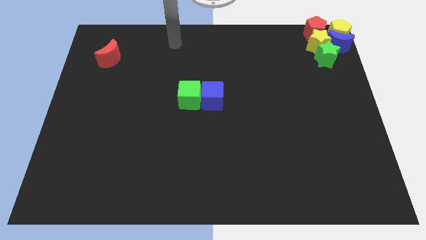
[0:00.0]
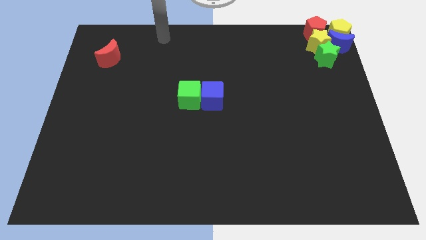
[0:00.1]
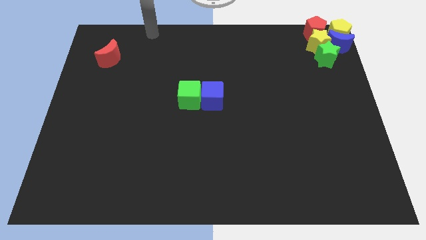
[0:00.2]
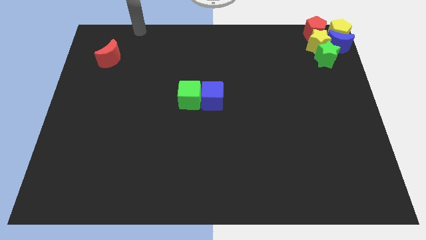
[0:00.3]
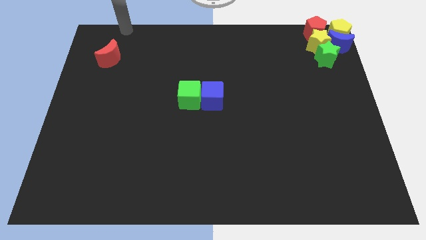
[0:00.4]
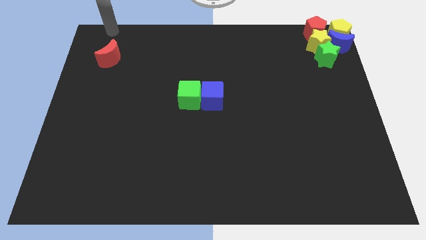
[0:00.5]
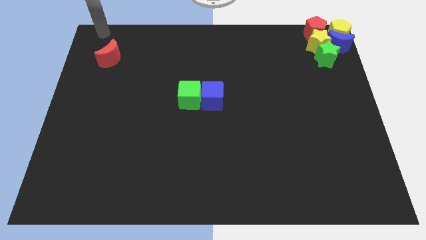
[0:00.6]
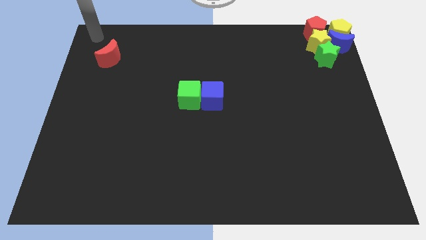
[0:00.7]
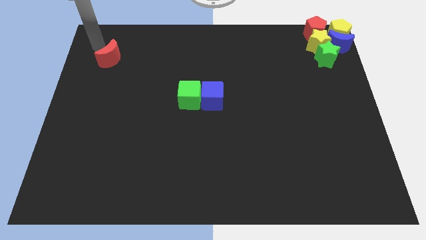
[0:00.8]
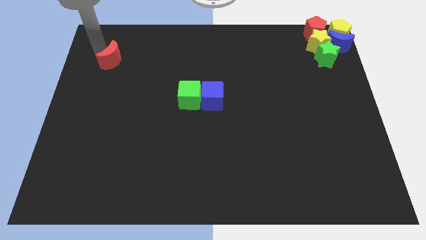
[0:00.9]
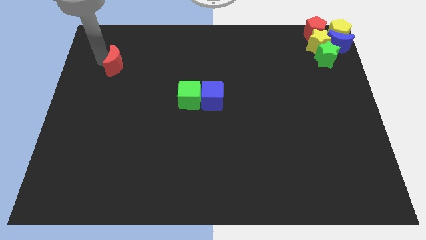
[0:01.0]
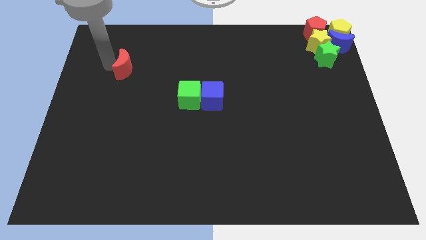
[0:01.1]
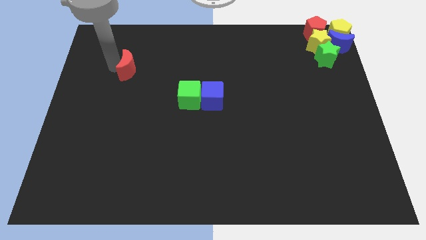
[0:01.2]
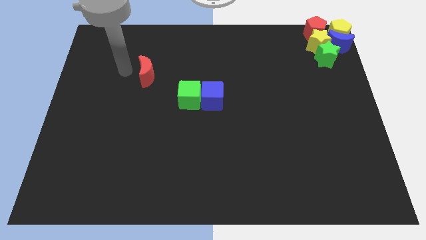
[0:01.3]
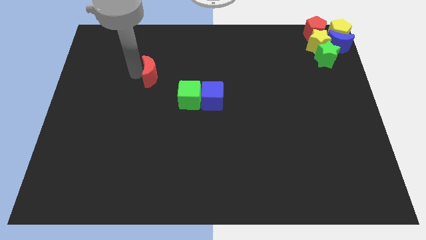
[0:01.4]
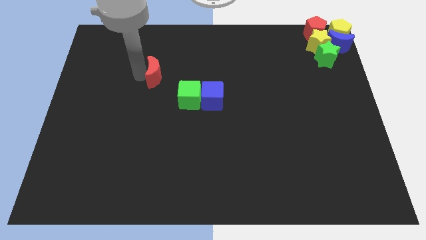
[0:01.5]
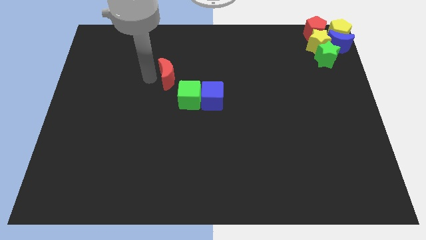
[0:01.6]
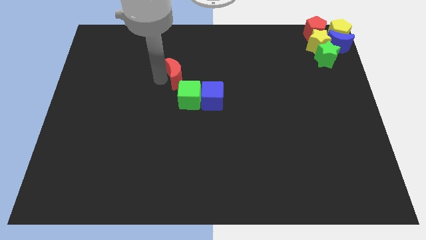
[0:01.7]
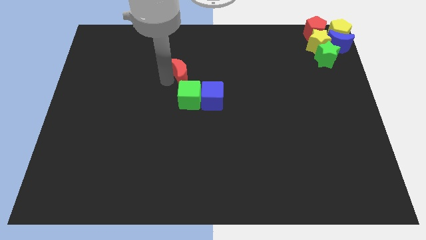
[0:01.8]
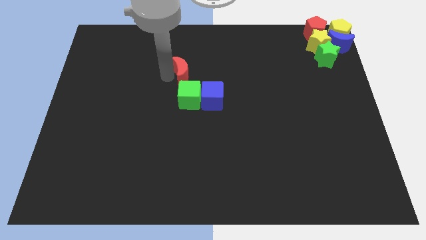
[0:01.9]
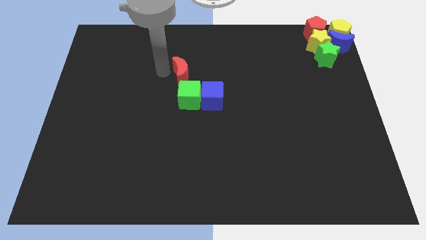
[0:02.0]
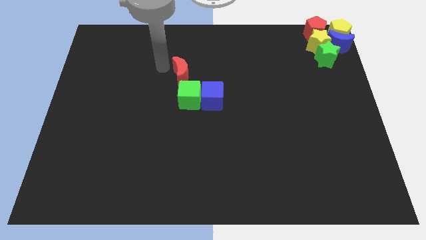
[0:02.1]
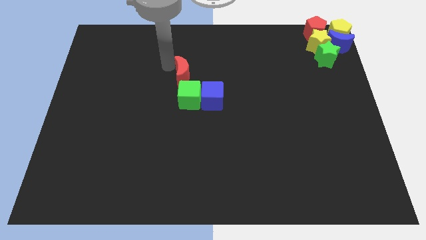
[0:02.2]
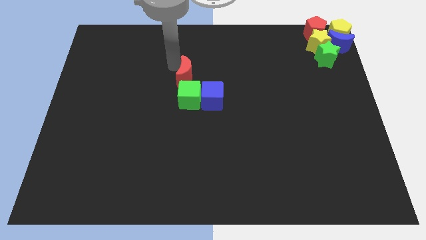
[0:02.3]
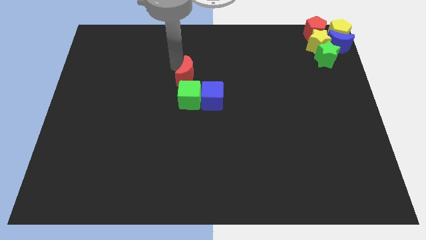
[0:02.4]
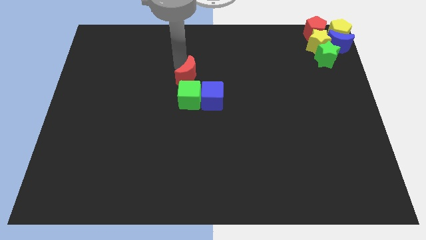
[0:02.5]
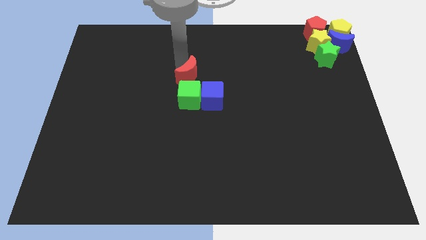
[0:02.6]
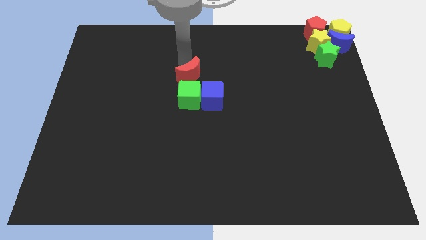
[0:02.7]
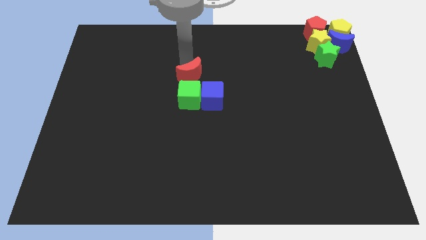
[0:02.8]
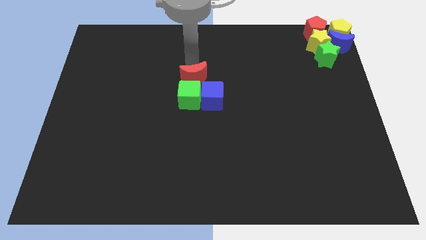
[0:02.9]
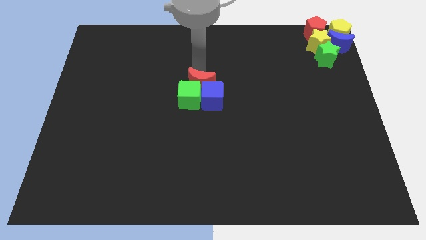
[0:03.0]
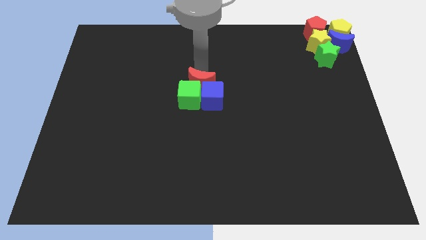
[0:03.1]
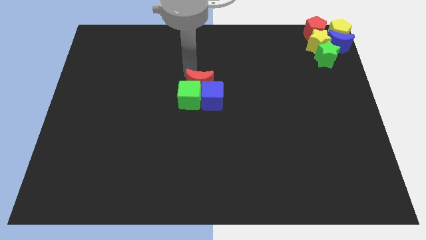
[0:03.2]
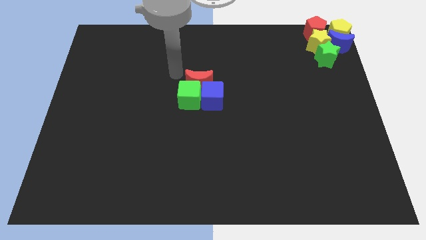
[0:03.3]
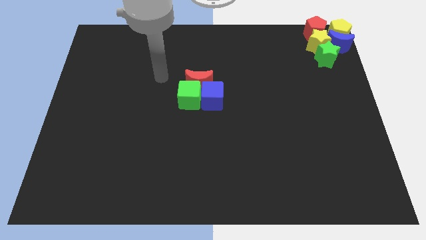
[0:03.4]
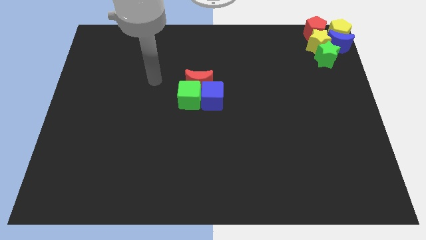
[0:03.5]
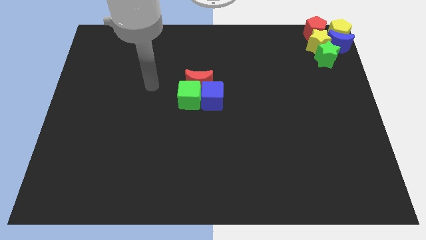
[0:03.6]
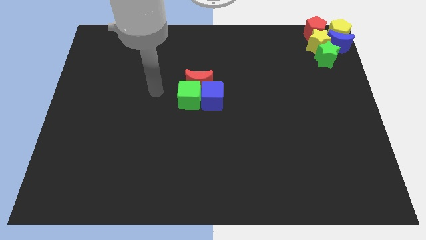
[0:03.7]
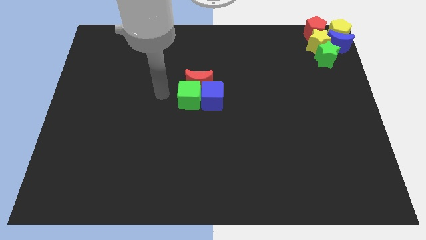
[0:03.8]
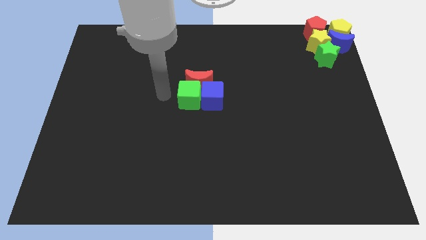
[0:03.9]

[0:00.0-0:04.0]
push the red moon to the top side of green and blue cubes

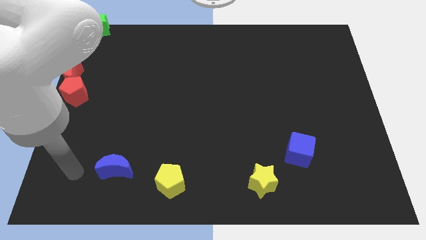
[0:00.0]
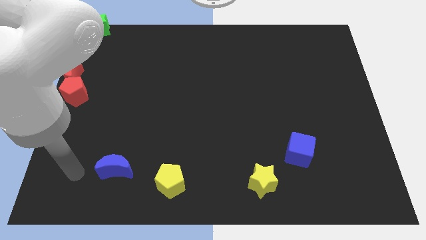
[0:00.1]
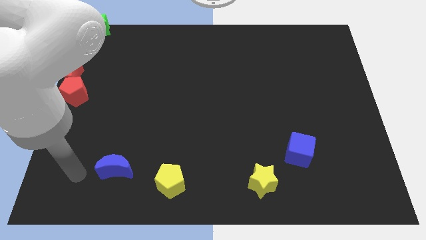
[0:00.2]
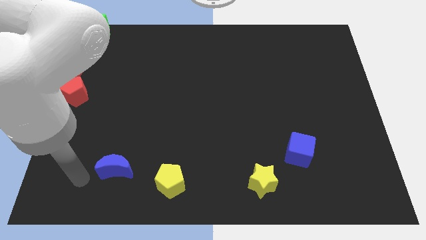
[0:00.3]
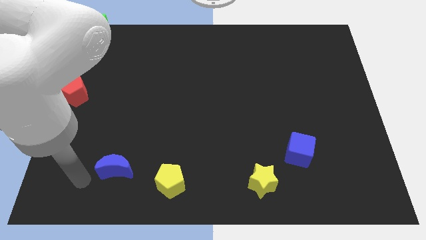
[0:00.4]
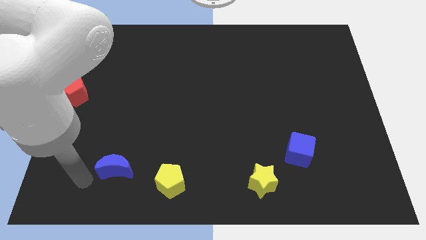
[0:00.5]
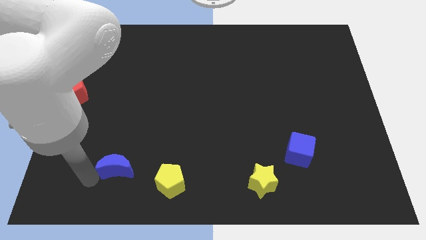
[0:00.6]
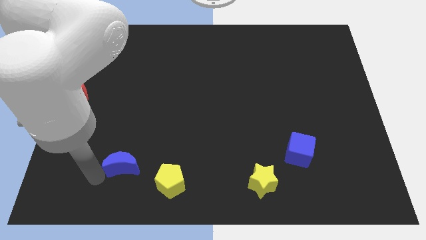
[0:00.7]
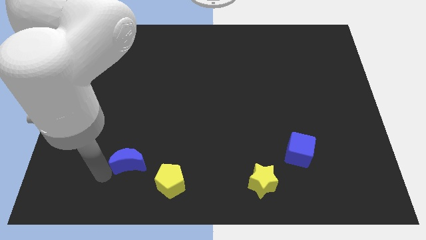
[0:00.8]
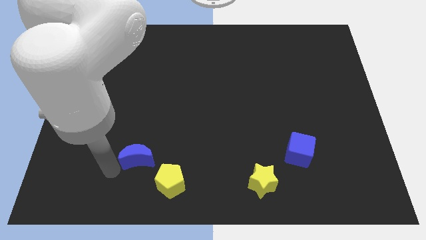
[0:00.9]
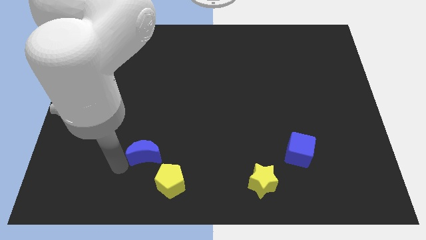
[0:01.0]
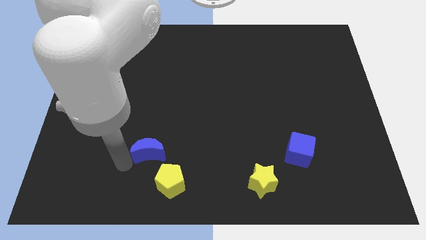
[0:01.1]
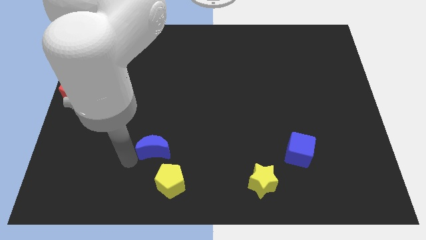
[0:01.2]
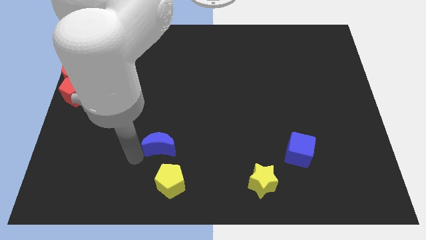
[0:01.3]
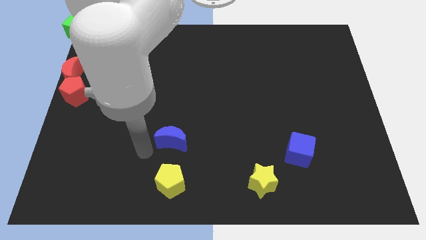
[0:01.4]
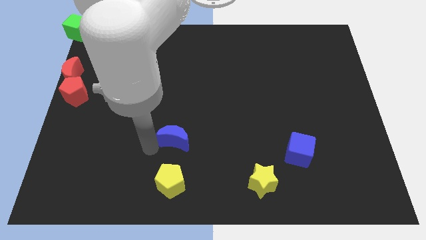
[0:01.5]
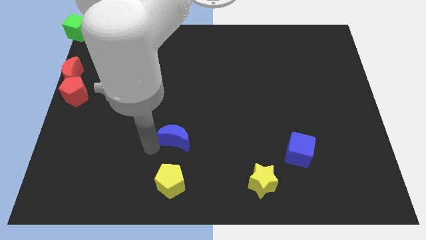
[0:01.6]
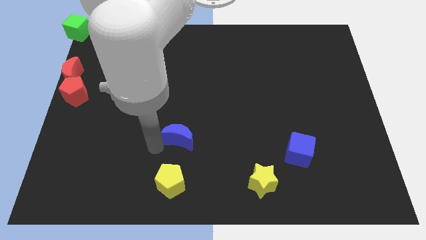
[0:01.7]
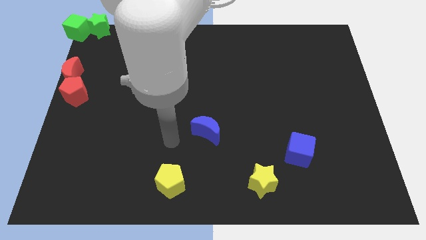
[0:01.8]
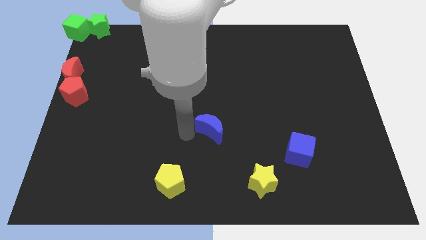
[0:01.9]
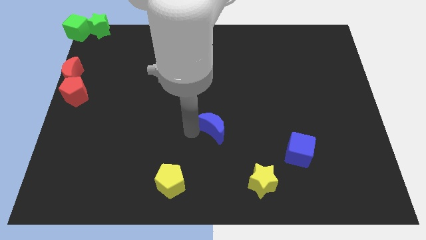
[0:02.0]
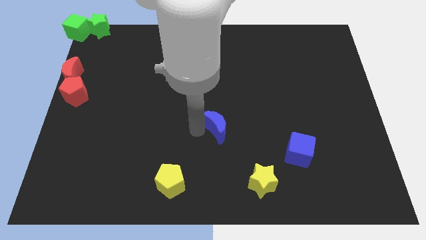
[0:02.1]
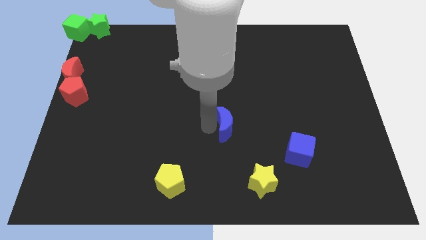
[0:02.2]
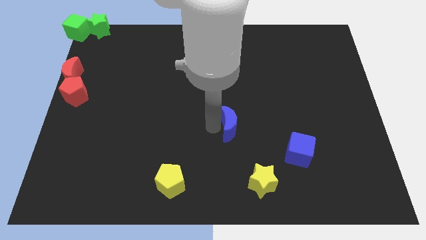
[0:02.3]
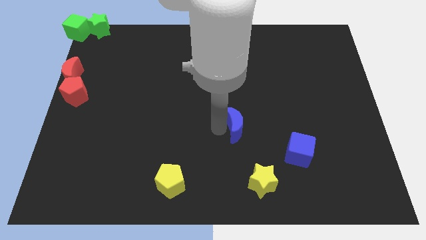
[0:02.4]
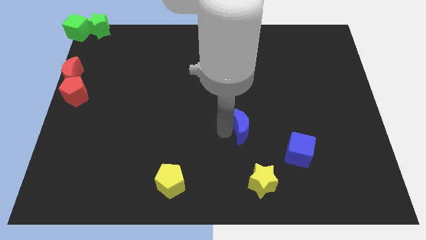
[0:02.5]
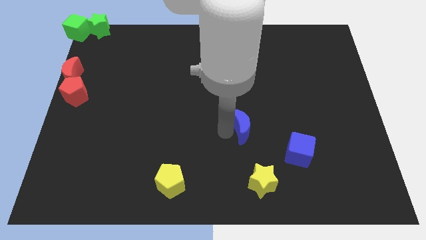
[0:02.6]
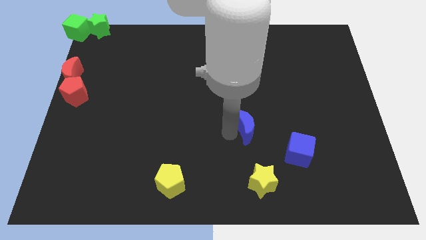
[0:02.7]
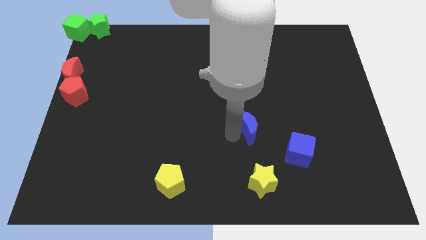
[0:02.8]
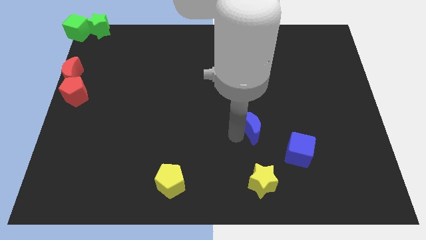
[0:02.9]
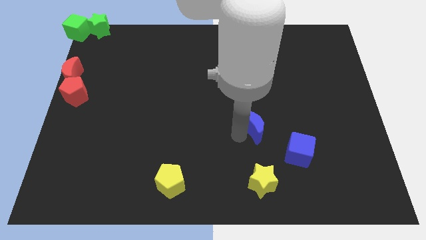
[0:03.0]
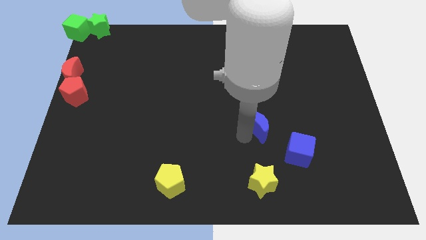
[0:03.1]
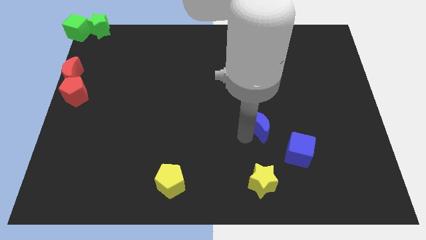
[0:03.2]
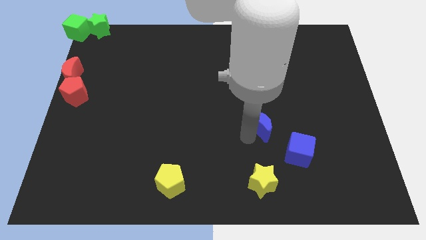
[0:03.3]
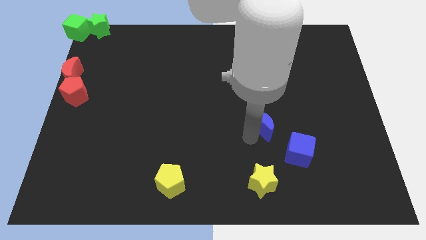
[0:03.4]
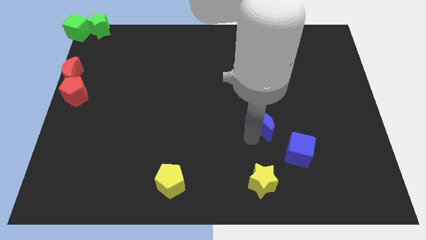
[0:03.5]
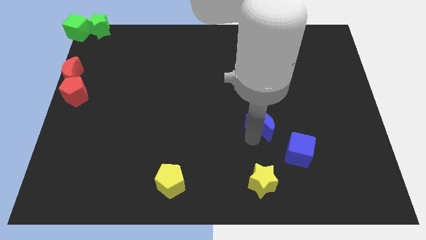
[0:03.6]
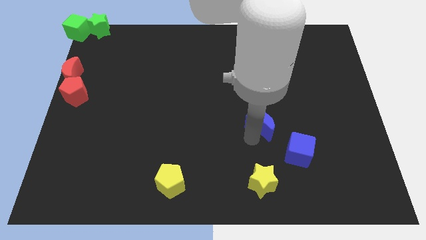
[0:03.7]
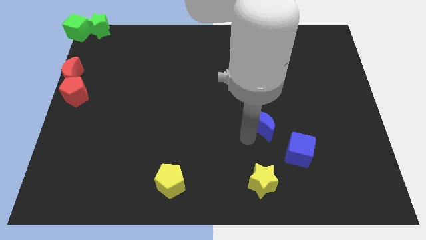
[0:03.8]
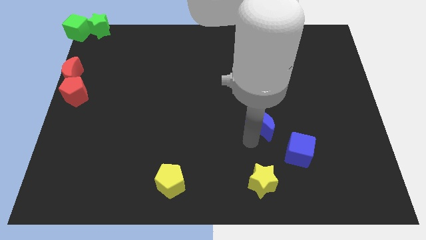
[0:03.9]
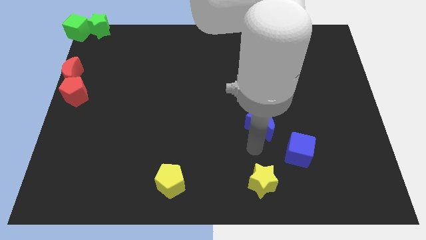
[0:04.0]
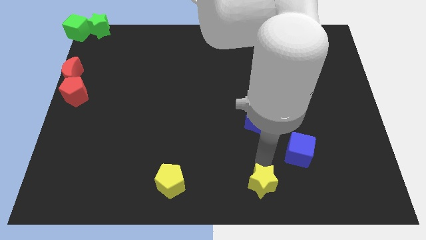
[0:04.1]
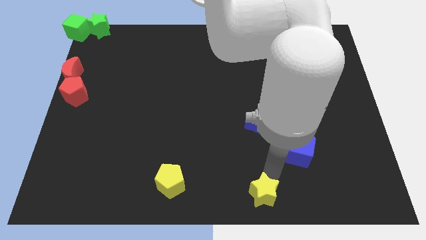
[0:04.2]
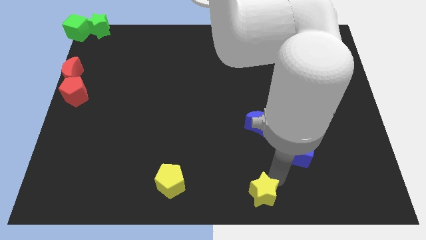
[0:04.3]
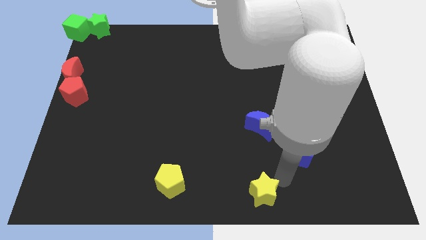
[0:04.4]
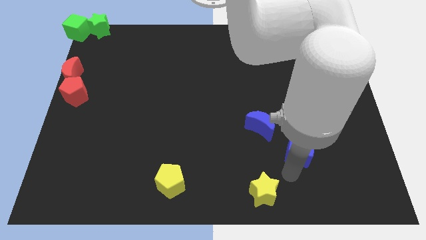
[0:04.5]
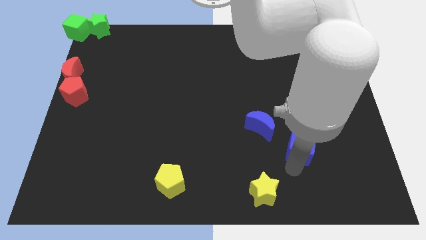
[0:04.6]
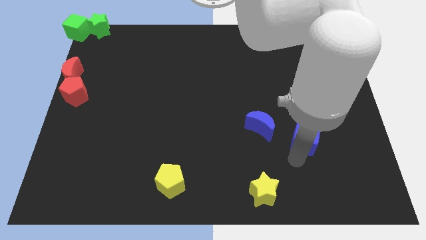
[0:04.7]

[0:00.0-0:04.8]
move the blue moon to the left side of the blue cube

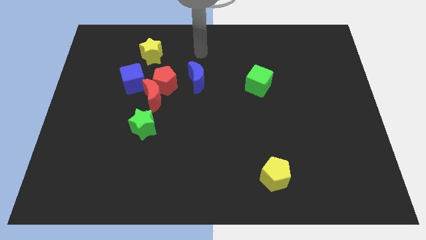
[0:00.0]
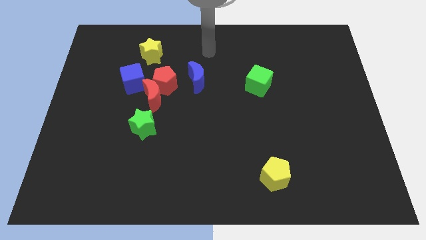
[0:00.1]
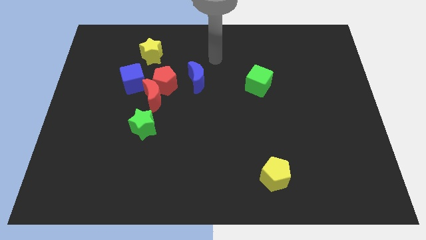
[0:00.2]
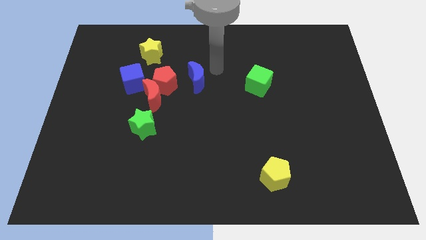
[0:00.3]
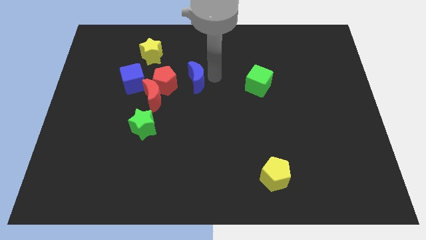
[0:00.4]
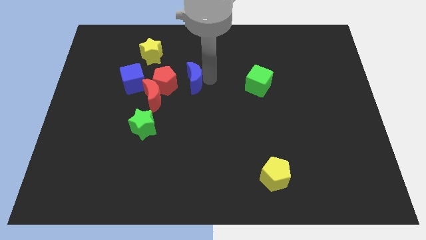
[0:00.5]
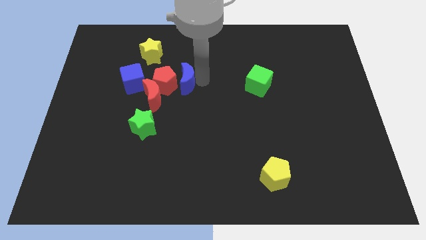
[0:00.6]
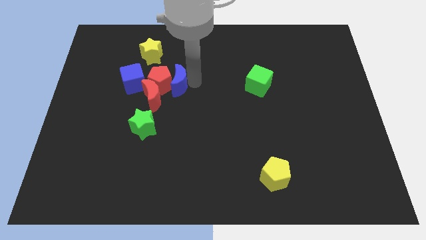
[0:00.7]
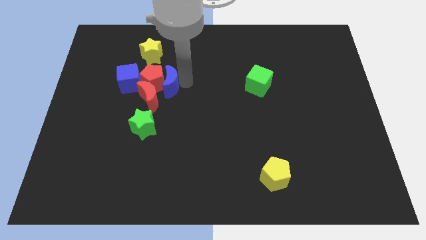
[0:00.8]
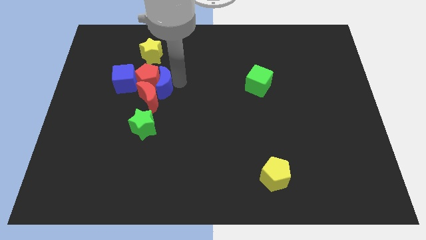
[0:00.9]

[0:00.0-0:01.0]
move the blue crescent into the red pentagon
